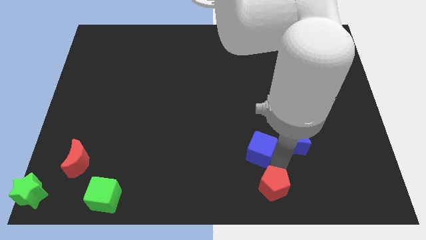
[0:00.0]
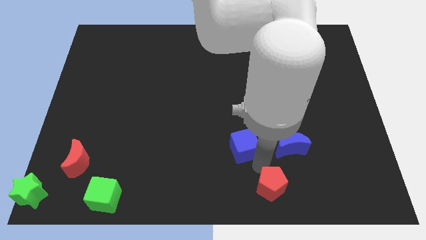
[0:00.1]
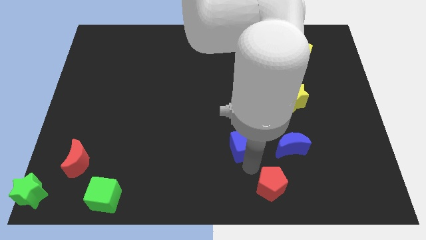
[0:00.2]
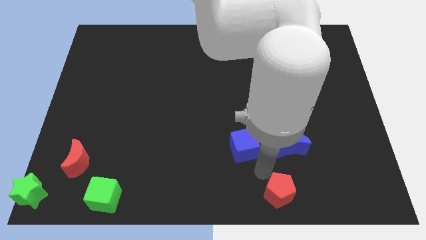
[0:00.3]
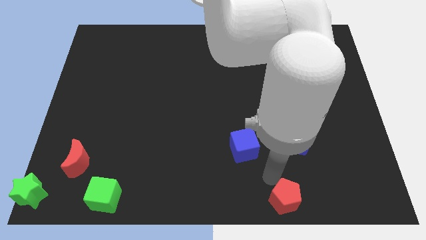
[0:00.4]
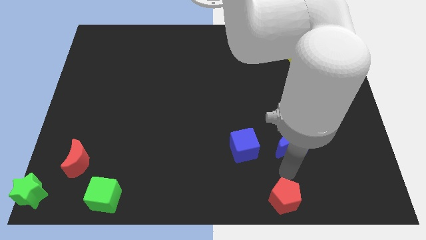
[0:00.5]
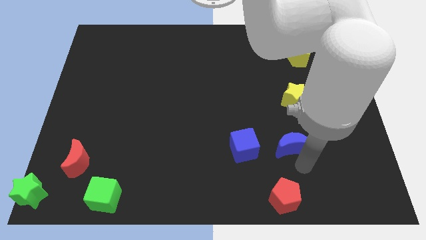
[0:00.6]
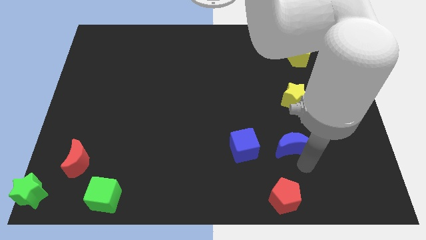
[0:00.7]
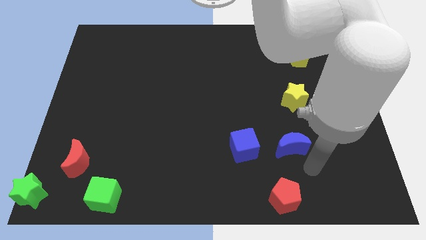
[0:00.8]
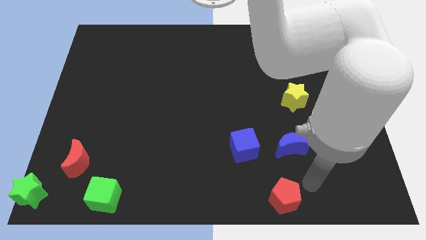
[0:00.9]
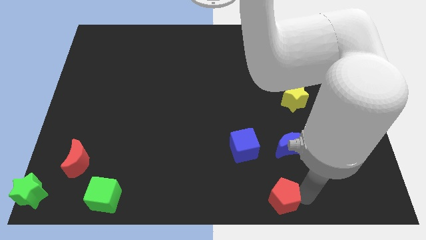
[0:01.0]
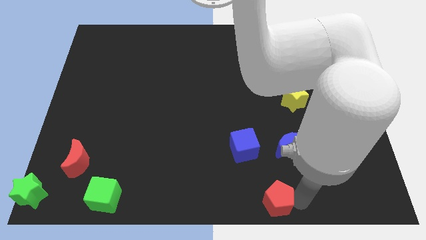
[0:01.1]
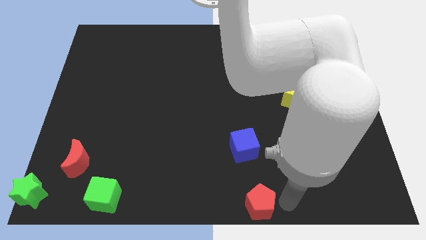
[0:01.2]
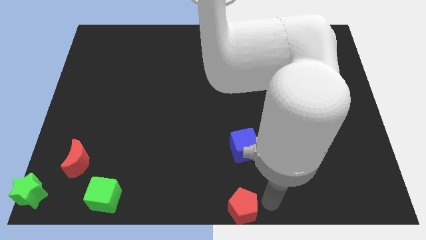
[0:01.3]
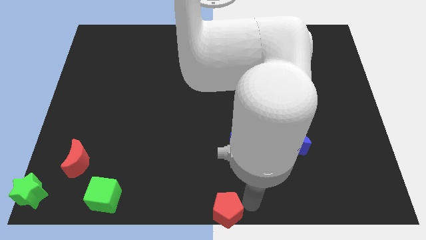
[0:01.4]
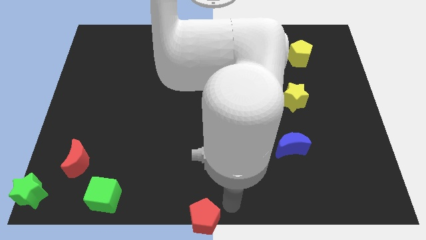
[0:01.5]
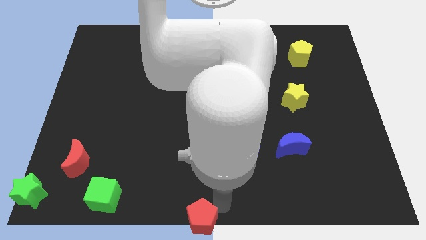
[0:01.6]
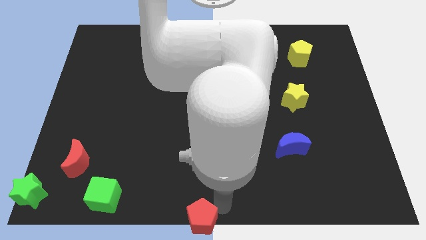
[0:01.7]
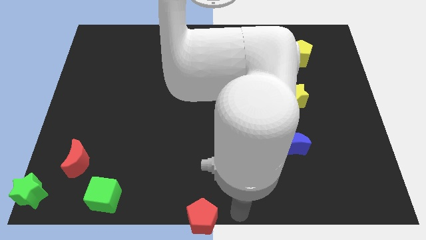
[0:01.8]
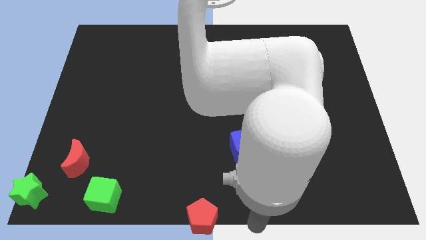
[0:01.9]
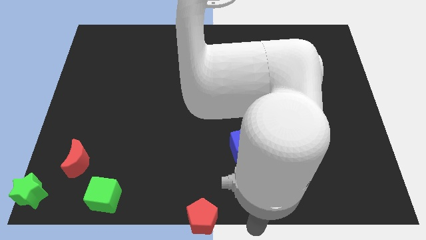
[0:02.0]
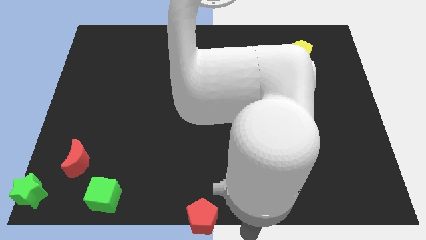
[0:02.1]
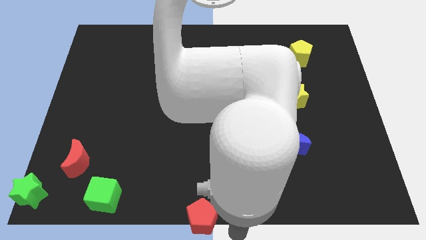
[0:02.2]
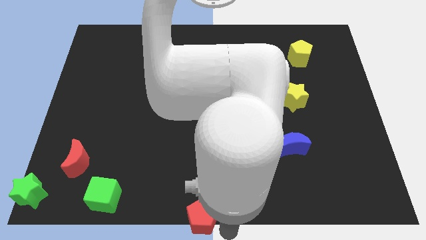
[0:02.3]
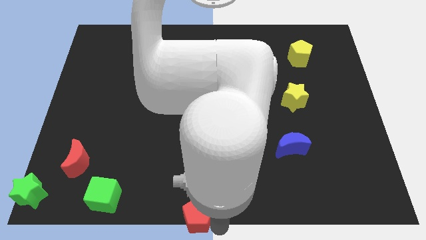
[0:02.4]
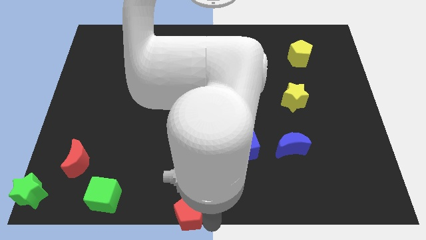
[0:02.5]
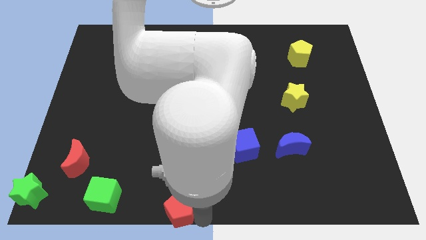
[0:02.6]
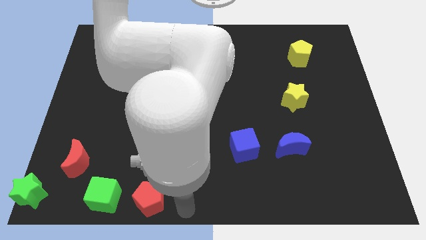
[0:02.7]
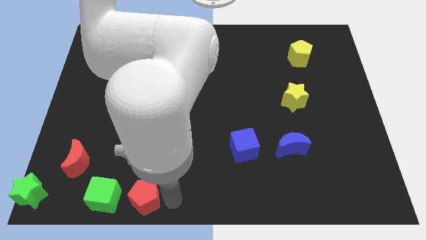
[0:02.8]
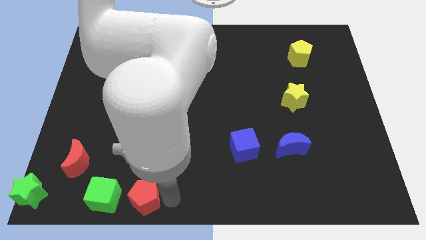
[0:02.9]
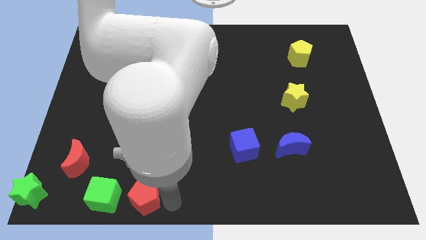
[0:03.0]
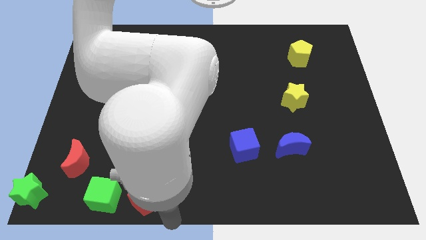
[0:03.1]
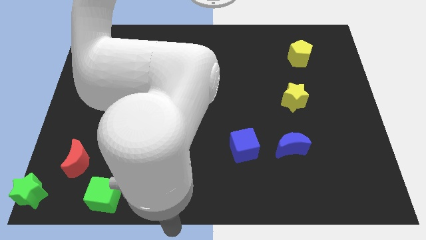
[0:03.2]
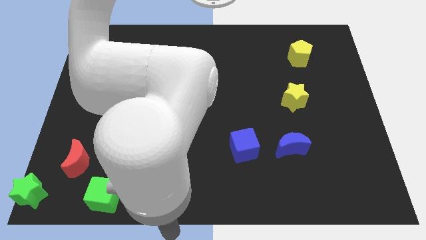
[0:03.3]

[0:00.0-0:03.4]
separate the red pentagon from the blue cube

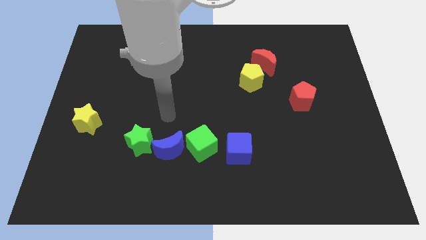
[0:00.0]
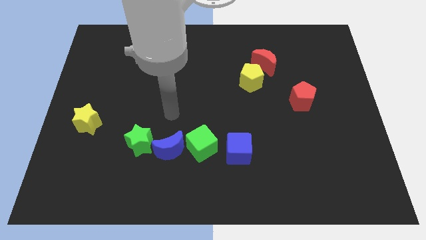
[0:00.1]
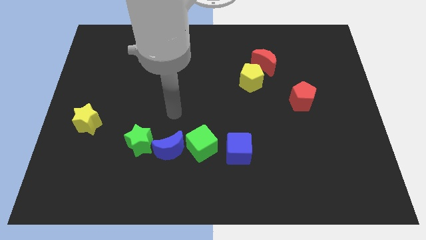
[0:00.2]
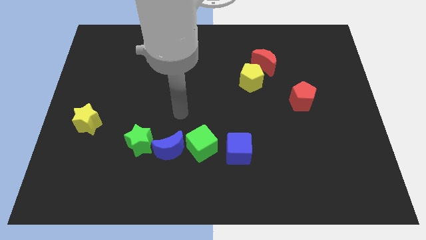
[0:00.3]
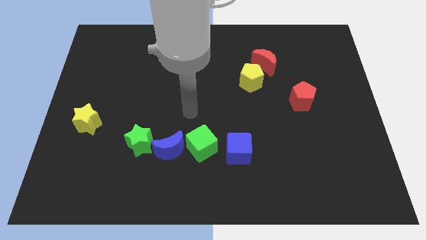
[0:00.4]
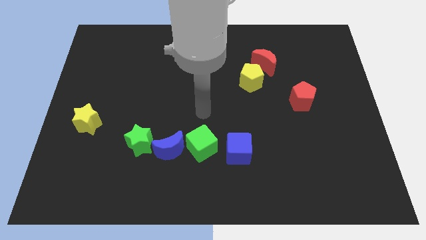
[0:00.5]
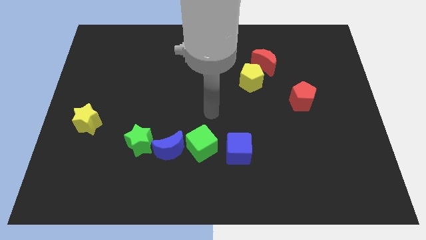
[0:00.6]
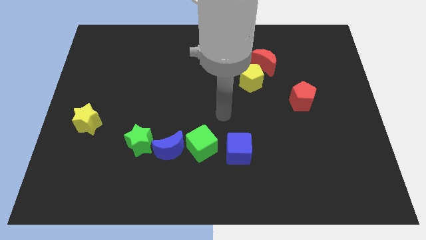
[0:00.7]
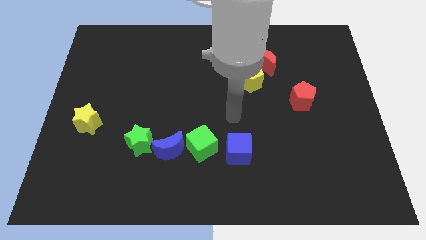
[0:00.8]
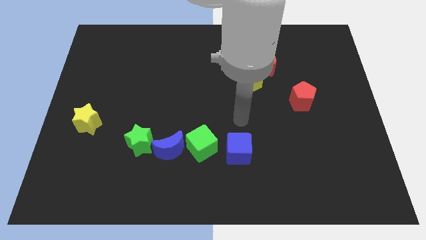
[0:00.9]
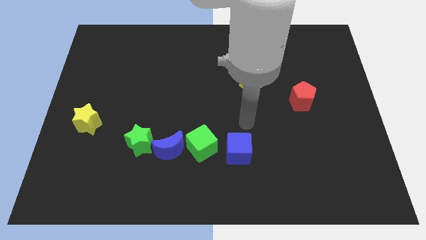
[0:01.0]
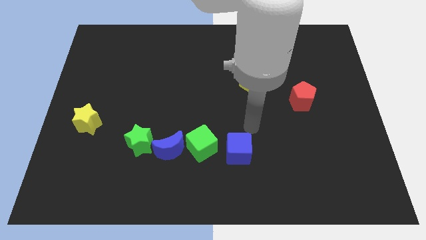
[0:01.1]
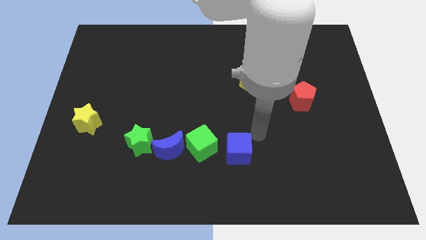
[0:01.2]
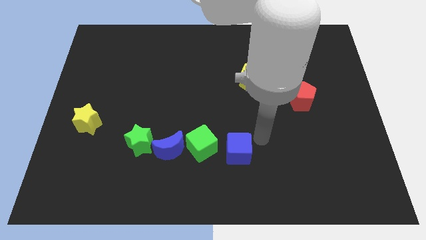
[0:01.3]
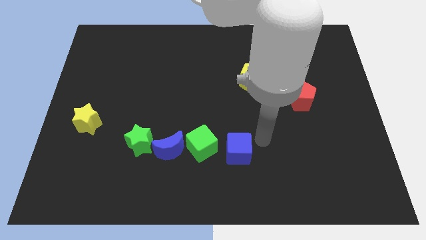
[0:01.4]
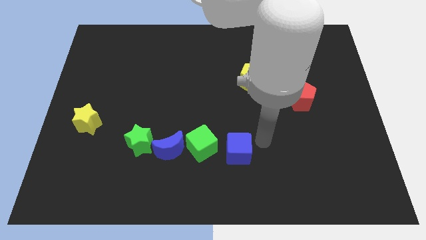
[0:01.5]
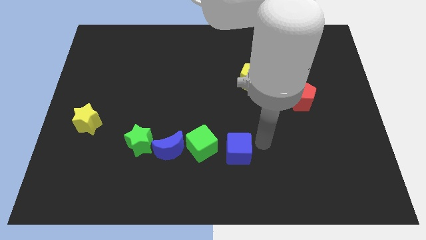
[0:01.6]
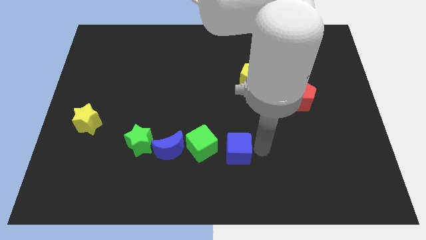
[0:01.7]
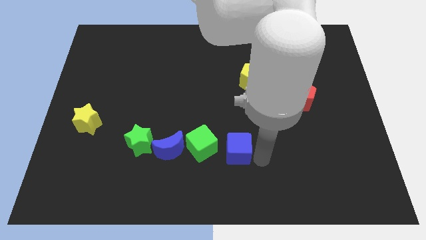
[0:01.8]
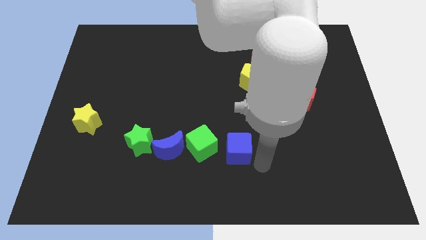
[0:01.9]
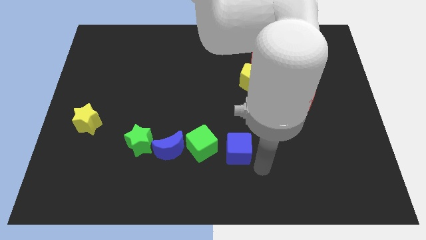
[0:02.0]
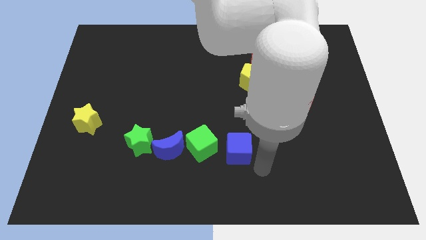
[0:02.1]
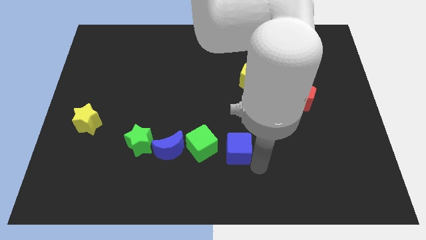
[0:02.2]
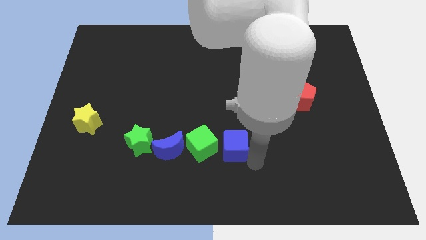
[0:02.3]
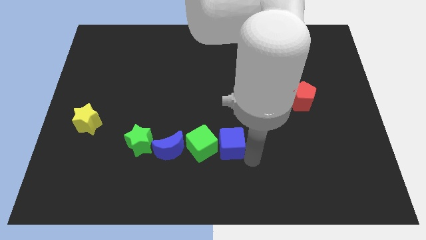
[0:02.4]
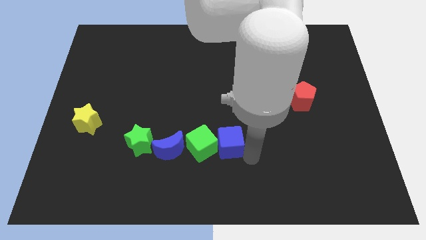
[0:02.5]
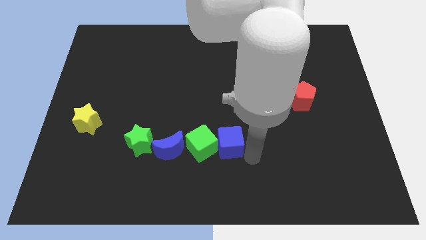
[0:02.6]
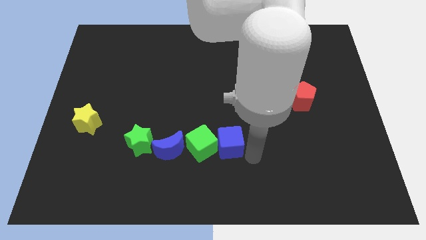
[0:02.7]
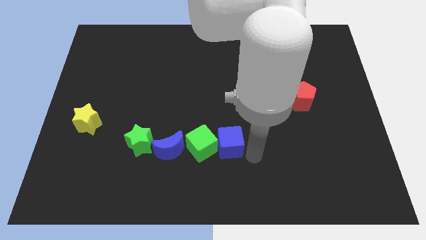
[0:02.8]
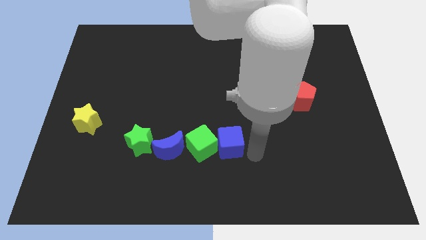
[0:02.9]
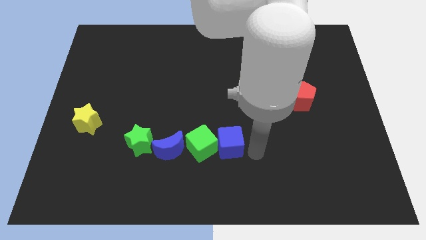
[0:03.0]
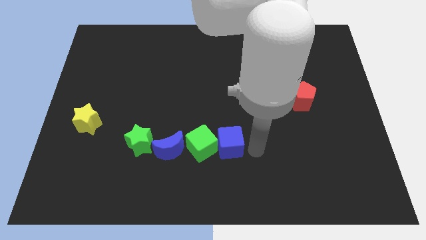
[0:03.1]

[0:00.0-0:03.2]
push the blue cube into the green cube

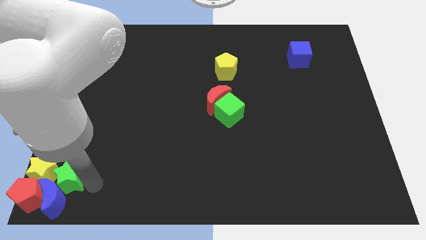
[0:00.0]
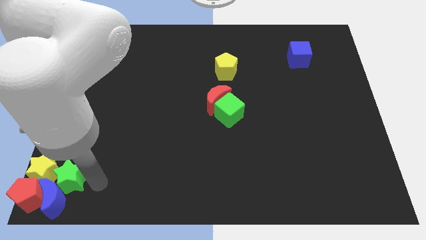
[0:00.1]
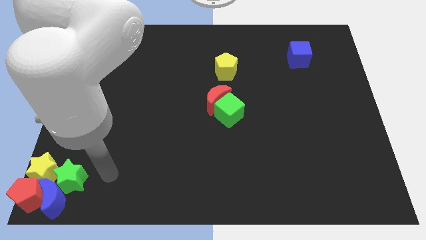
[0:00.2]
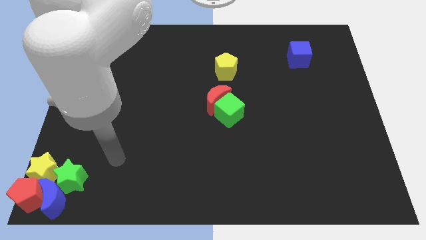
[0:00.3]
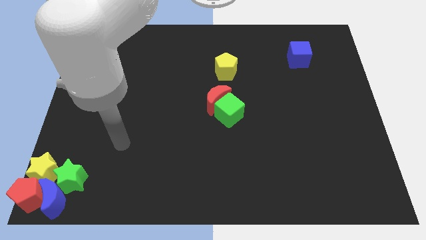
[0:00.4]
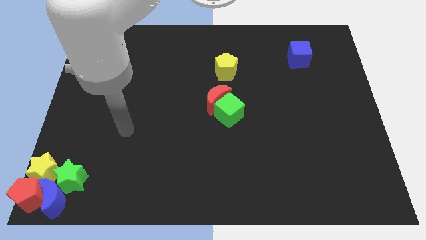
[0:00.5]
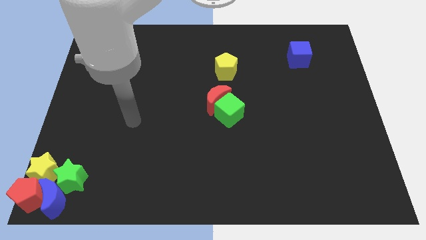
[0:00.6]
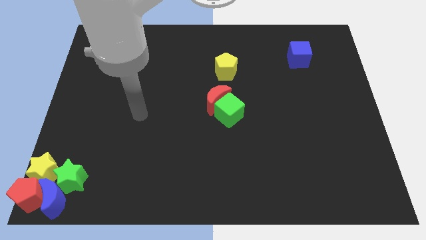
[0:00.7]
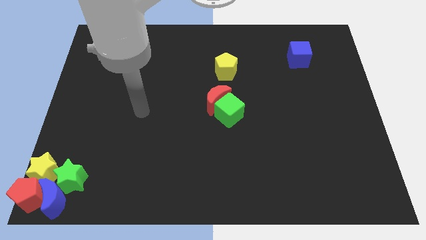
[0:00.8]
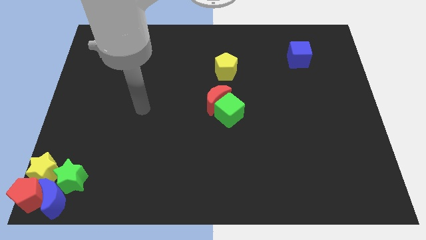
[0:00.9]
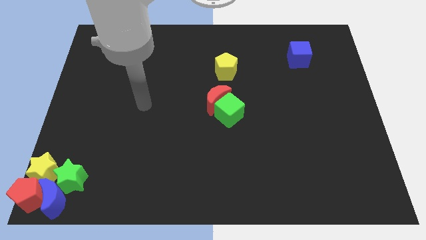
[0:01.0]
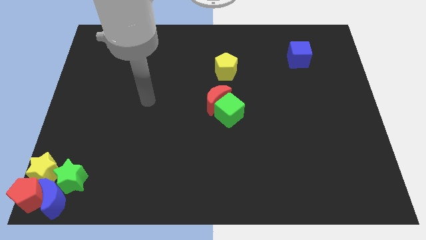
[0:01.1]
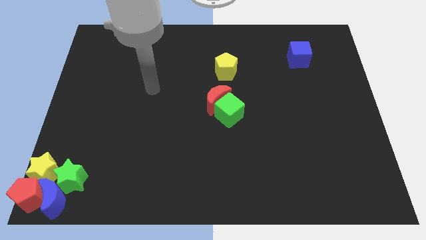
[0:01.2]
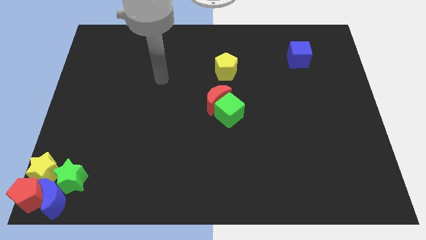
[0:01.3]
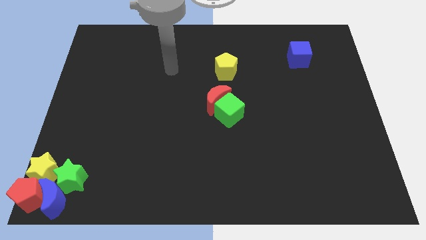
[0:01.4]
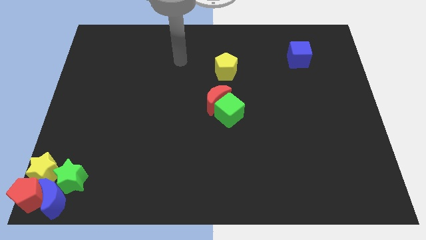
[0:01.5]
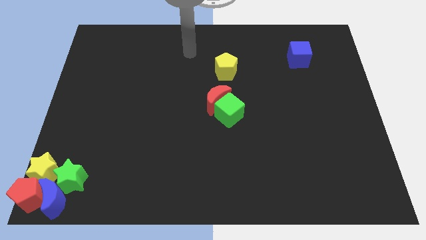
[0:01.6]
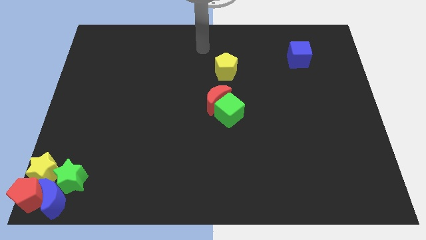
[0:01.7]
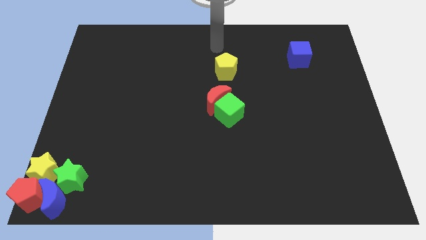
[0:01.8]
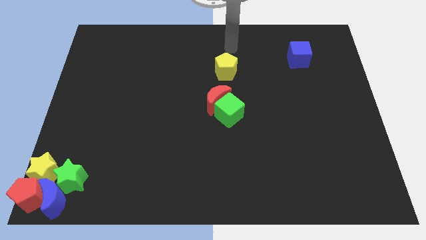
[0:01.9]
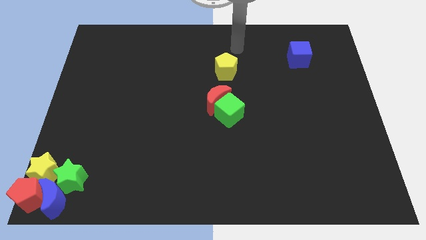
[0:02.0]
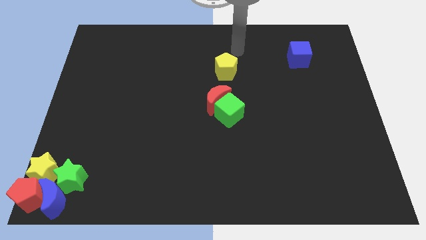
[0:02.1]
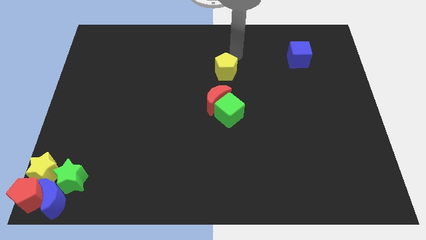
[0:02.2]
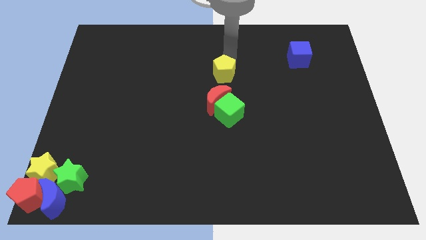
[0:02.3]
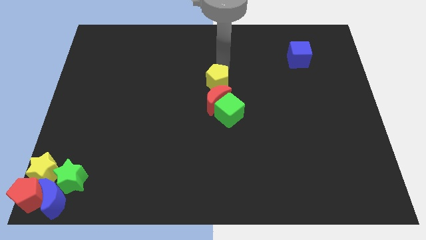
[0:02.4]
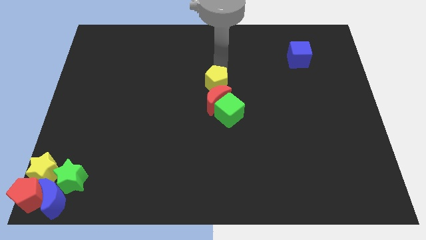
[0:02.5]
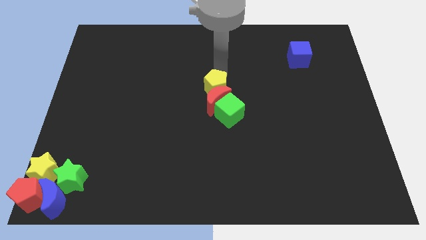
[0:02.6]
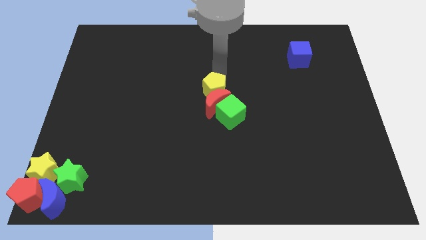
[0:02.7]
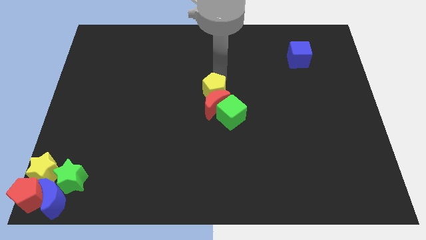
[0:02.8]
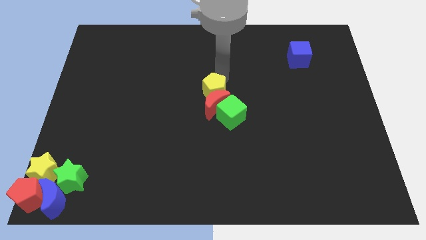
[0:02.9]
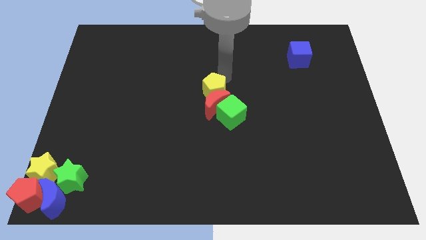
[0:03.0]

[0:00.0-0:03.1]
place the yellow pentagon red moon and green star at the center of the board
